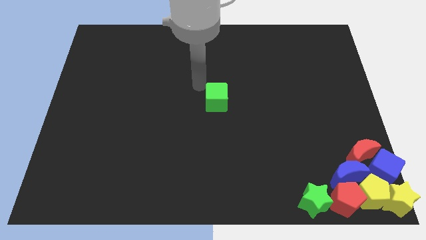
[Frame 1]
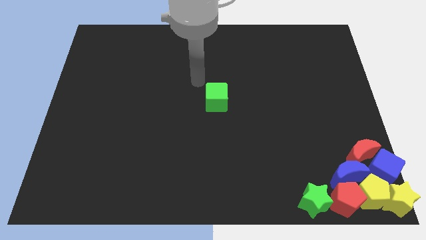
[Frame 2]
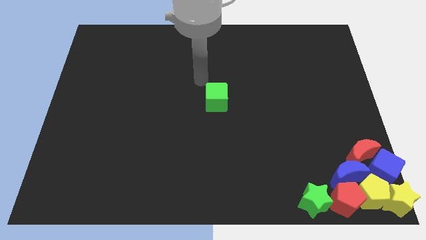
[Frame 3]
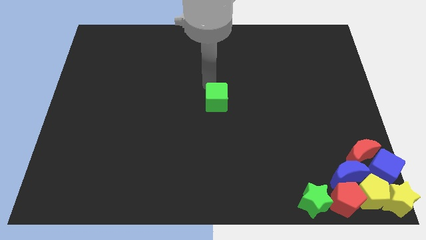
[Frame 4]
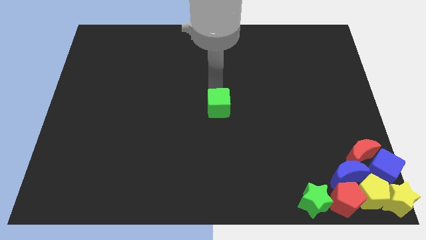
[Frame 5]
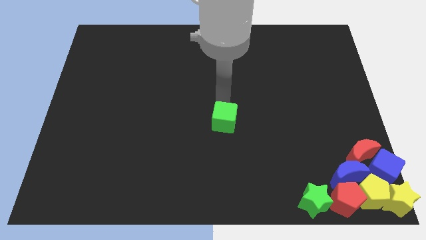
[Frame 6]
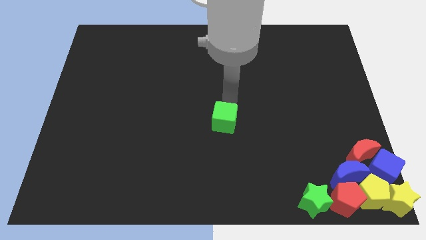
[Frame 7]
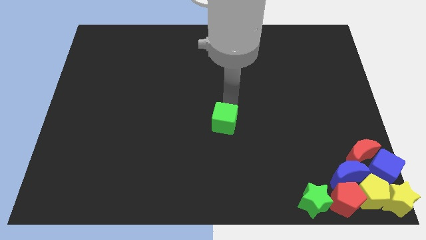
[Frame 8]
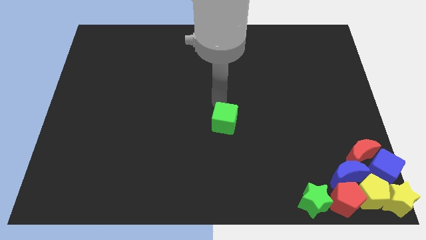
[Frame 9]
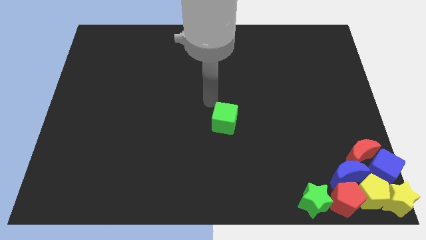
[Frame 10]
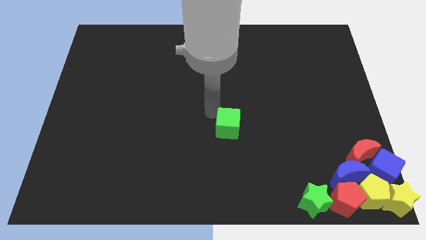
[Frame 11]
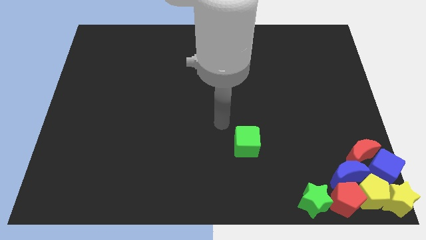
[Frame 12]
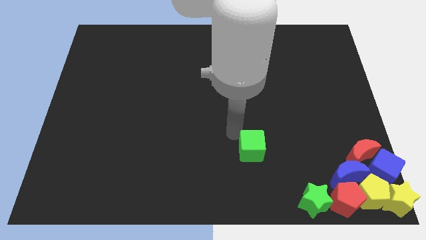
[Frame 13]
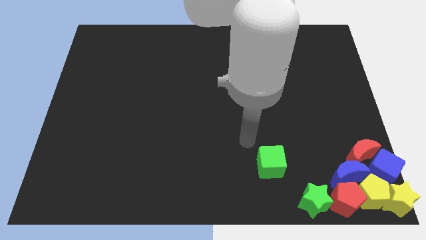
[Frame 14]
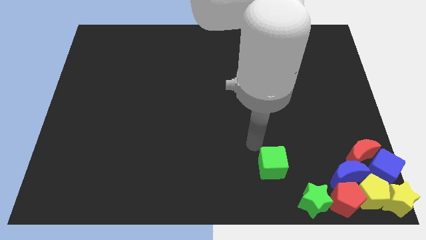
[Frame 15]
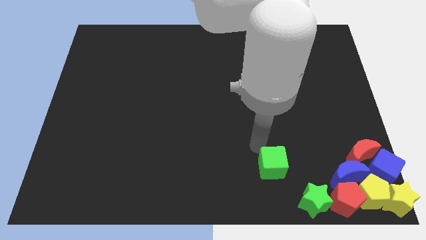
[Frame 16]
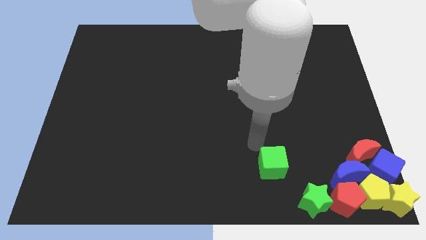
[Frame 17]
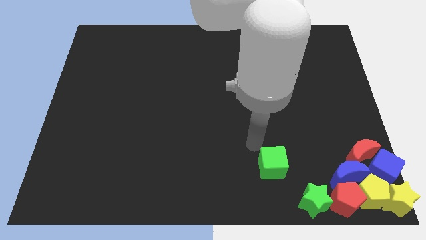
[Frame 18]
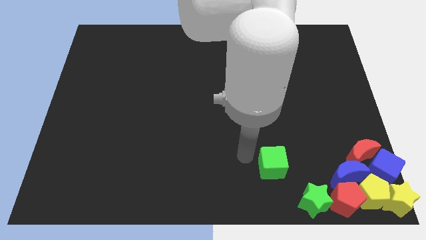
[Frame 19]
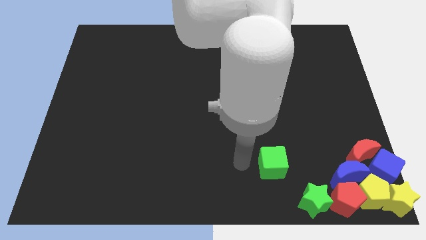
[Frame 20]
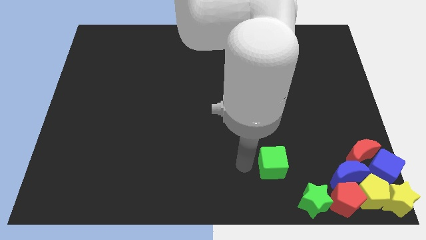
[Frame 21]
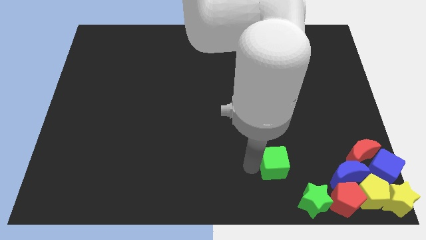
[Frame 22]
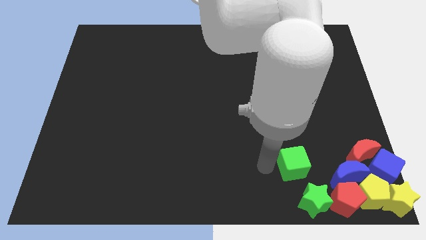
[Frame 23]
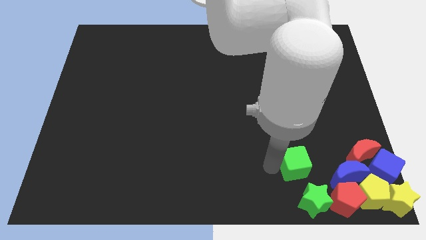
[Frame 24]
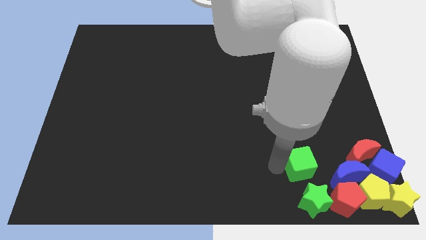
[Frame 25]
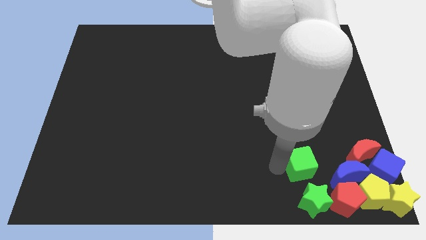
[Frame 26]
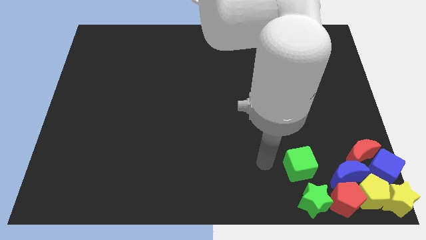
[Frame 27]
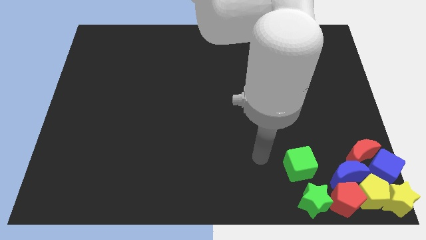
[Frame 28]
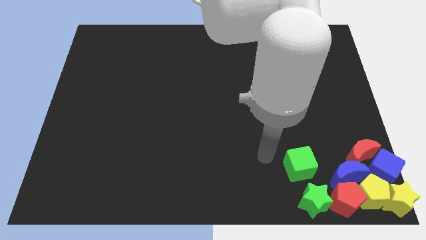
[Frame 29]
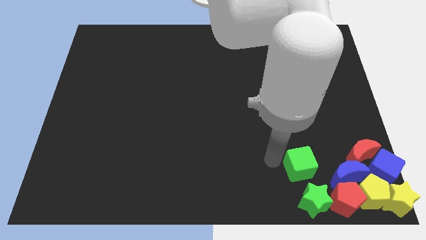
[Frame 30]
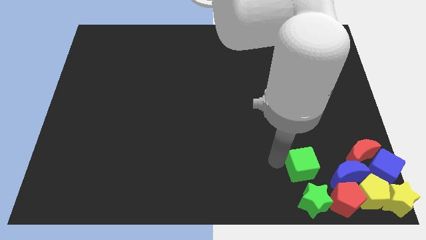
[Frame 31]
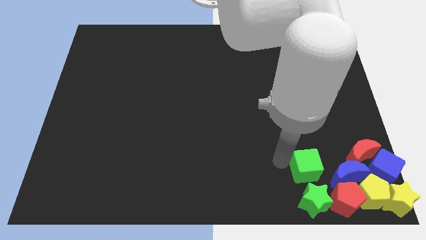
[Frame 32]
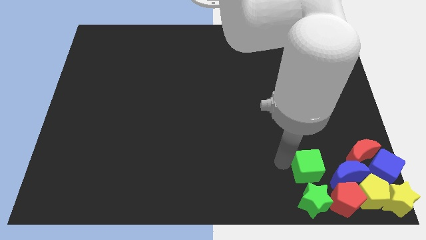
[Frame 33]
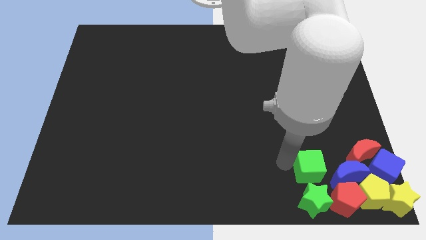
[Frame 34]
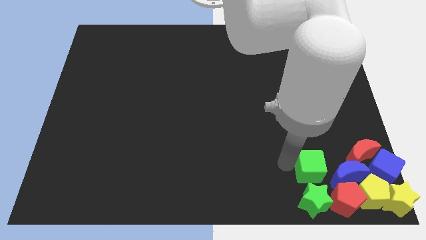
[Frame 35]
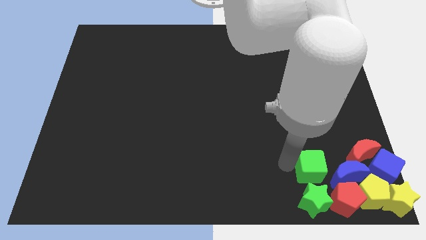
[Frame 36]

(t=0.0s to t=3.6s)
move the green cube above the green star

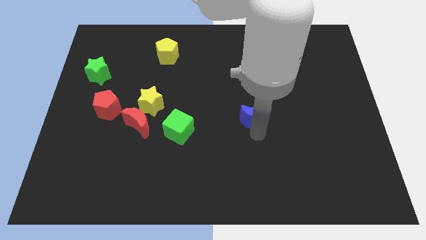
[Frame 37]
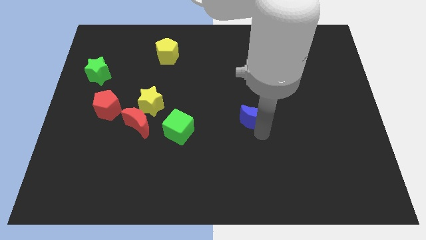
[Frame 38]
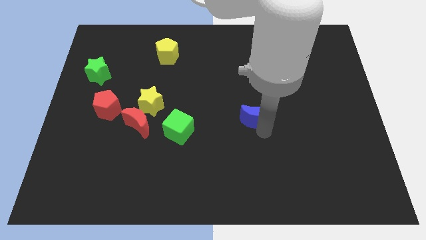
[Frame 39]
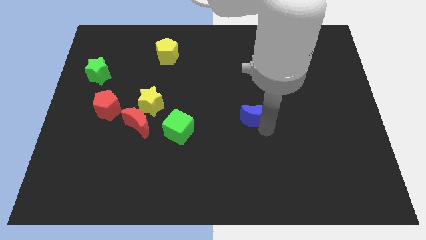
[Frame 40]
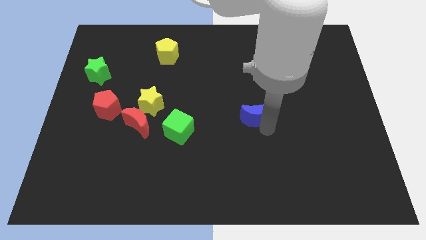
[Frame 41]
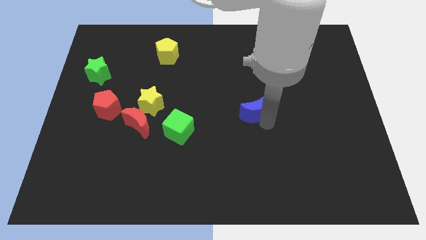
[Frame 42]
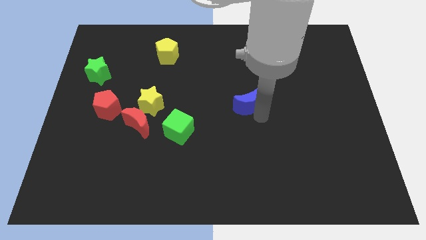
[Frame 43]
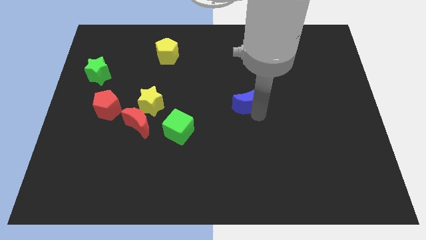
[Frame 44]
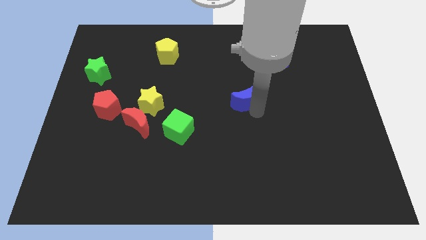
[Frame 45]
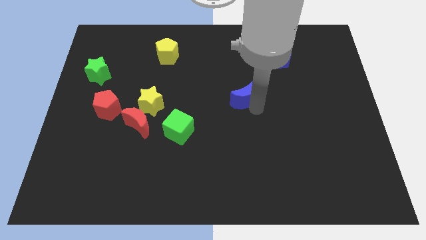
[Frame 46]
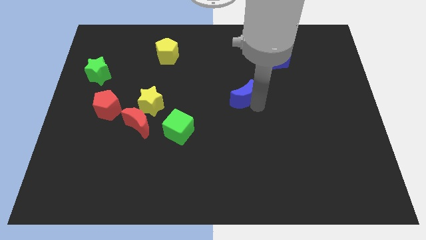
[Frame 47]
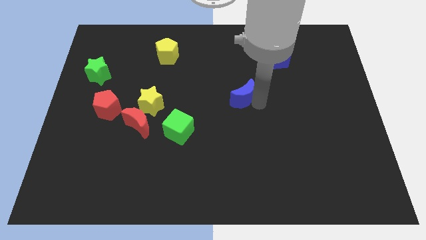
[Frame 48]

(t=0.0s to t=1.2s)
slide blue moon to the right of yellow star

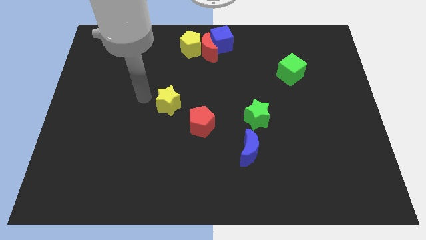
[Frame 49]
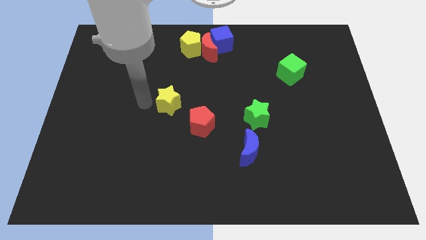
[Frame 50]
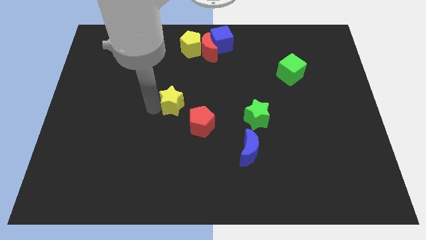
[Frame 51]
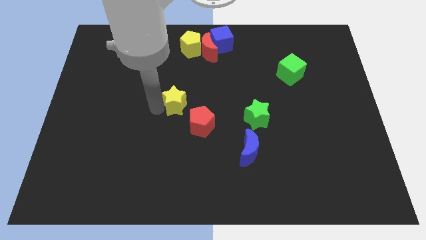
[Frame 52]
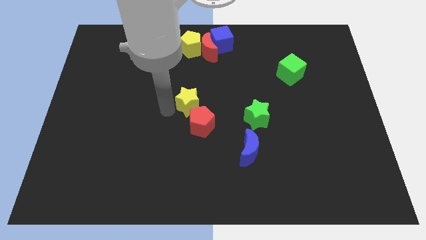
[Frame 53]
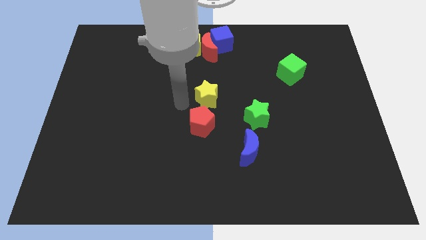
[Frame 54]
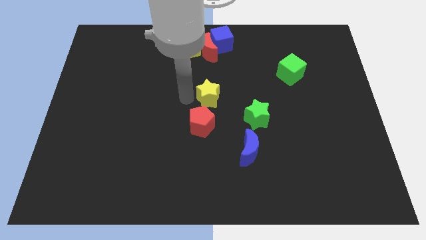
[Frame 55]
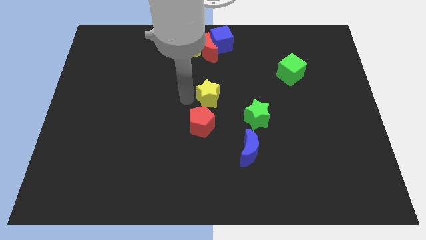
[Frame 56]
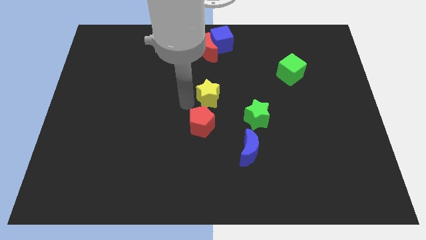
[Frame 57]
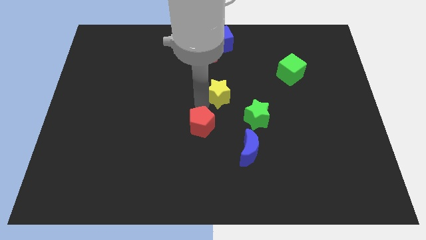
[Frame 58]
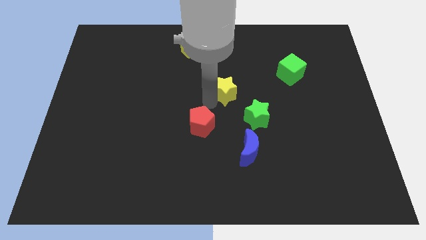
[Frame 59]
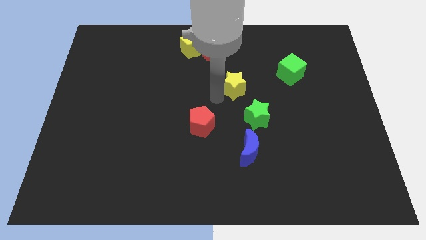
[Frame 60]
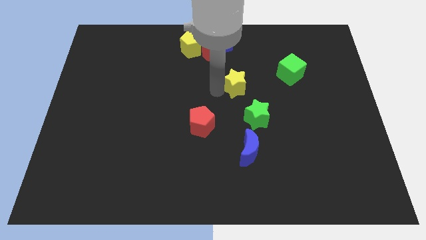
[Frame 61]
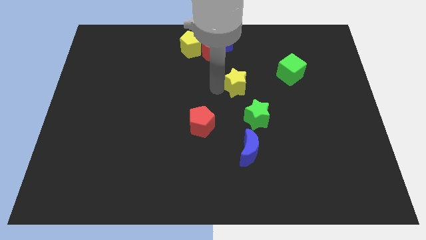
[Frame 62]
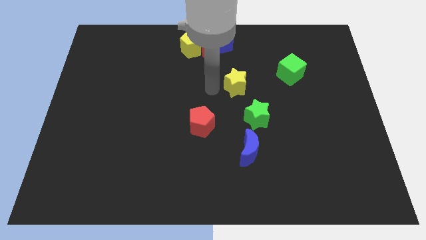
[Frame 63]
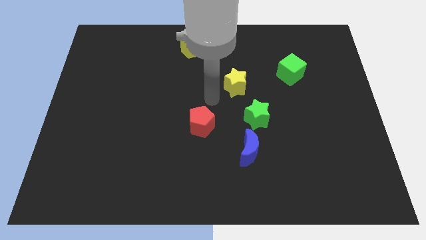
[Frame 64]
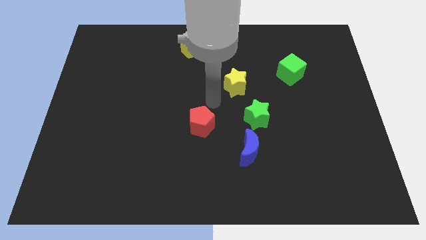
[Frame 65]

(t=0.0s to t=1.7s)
push the yellow star to the top of the green star

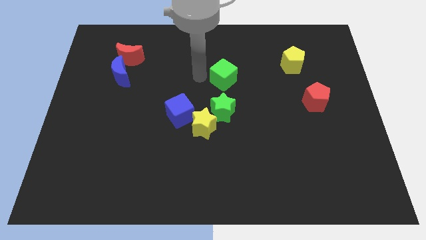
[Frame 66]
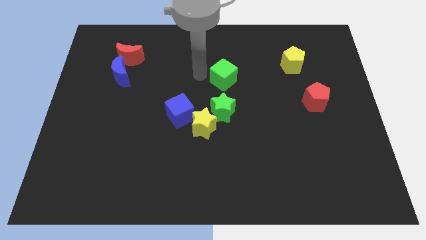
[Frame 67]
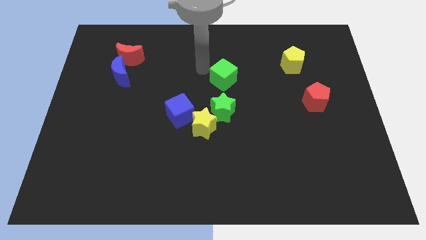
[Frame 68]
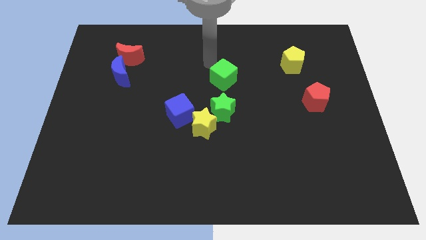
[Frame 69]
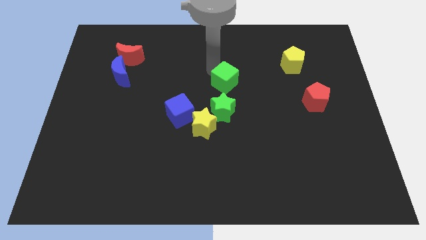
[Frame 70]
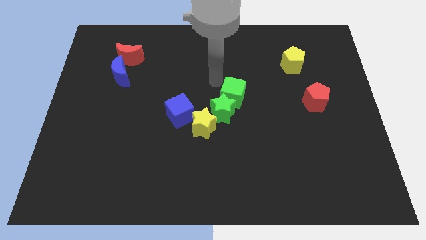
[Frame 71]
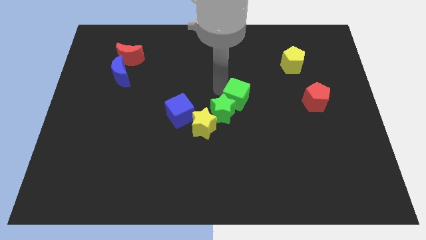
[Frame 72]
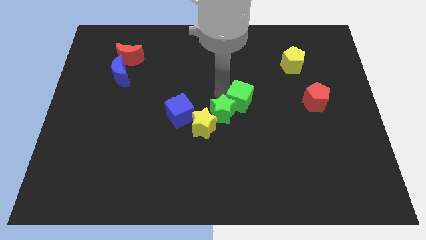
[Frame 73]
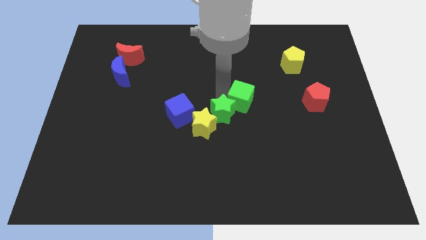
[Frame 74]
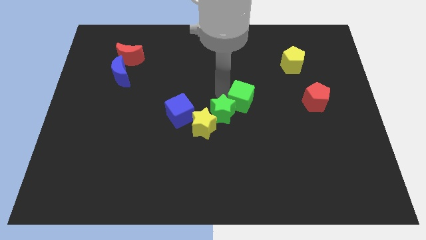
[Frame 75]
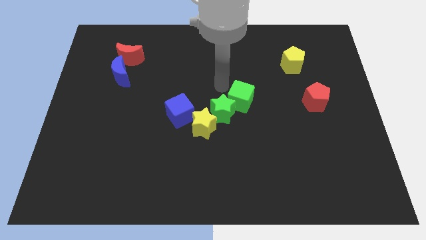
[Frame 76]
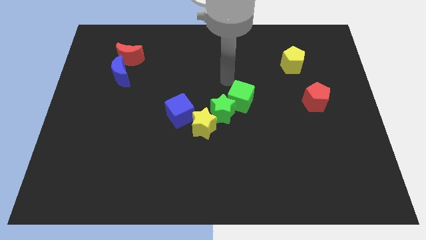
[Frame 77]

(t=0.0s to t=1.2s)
move the green cube towards the top right of green star

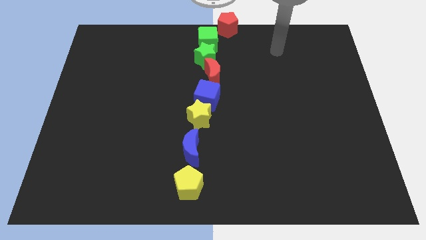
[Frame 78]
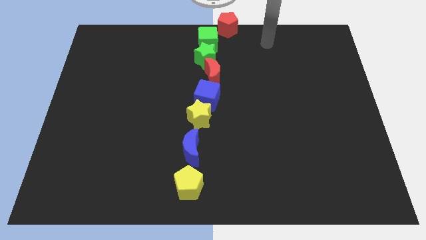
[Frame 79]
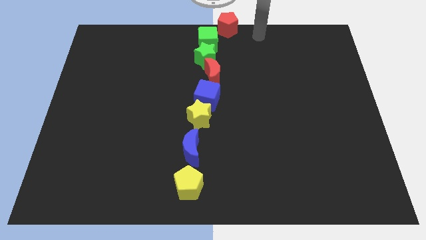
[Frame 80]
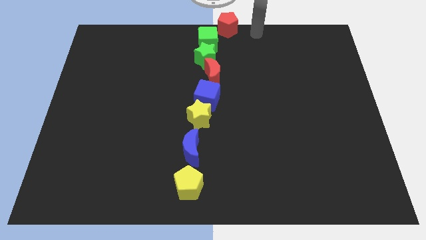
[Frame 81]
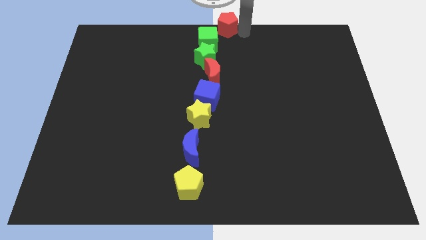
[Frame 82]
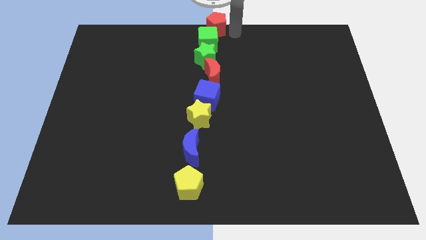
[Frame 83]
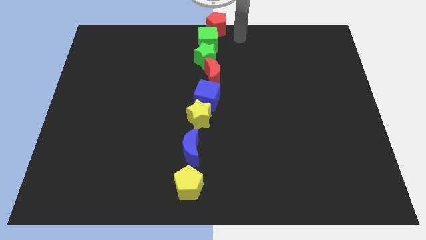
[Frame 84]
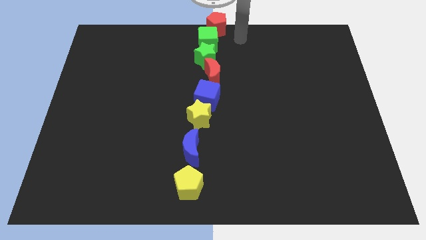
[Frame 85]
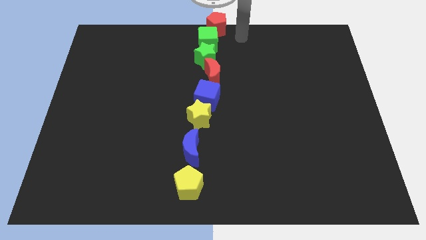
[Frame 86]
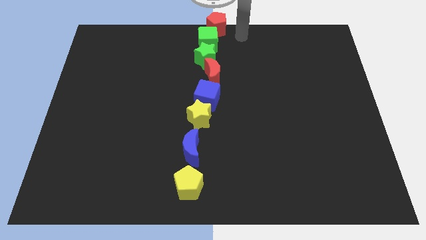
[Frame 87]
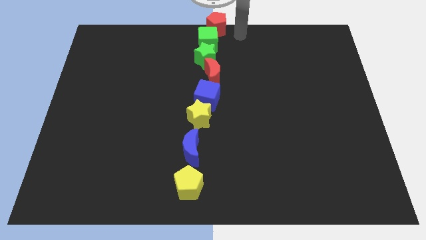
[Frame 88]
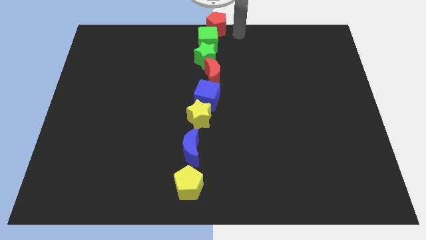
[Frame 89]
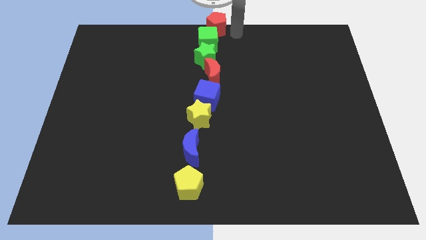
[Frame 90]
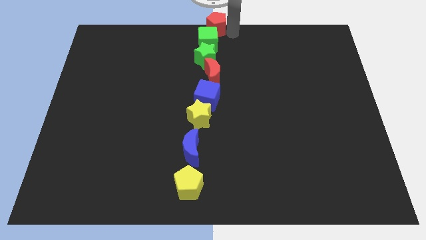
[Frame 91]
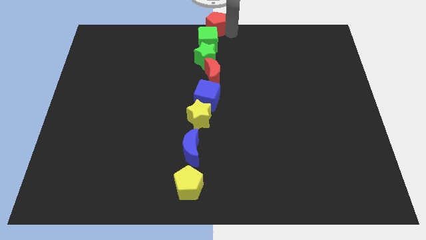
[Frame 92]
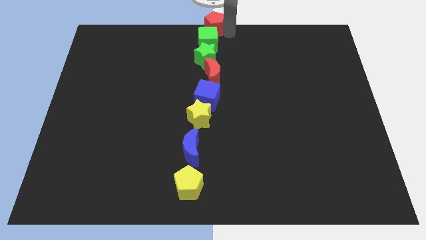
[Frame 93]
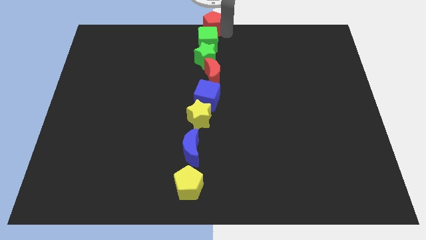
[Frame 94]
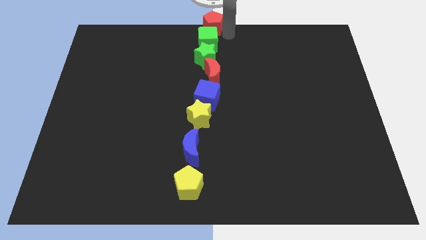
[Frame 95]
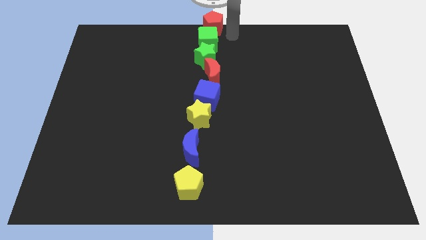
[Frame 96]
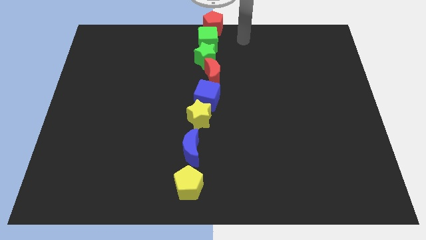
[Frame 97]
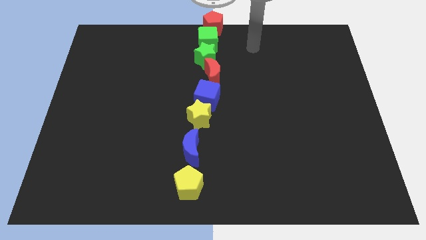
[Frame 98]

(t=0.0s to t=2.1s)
place the red pentagon above the green cube
